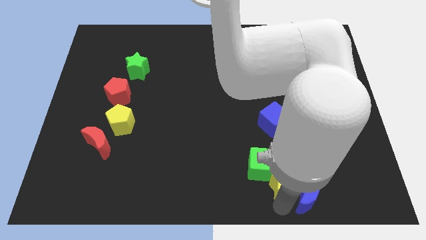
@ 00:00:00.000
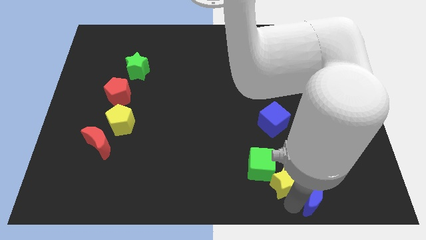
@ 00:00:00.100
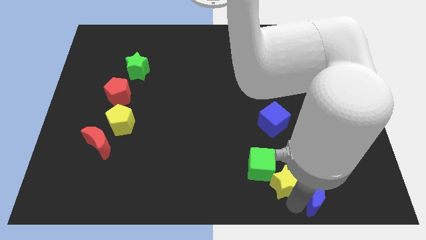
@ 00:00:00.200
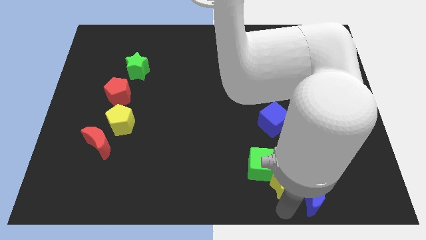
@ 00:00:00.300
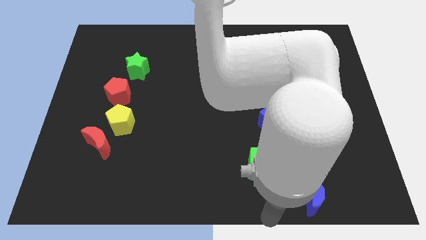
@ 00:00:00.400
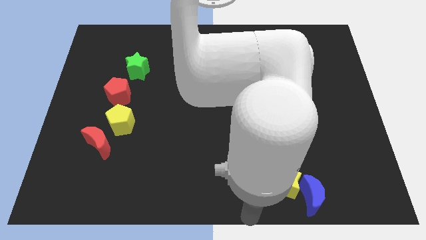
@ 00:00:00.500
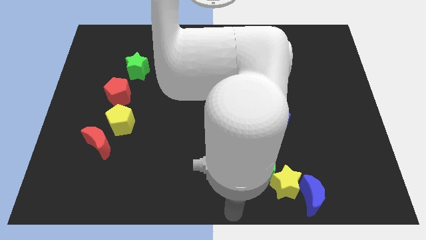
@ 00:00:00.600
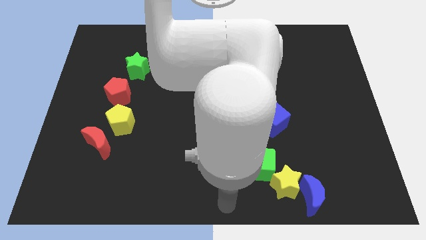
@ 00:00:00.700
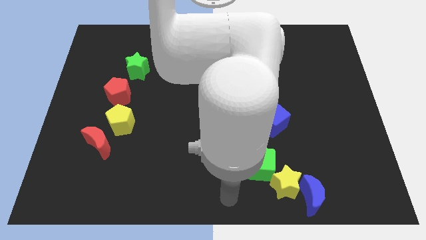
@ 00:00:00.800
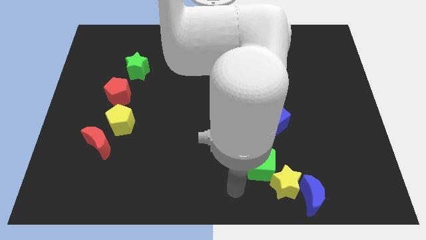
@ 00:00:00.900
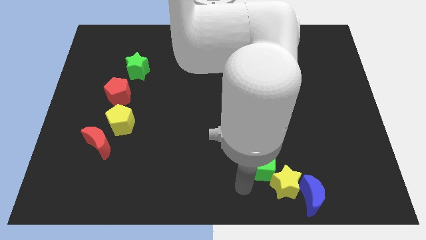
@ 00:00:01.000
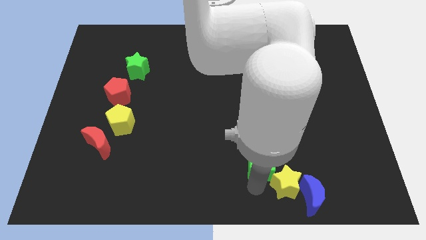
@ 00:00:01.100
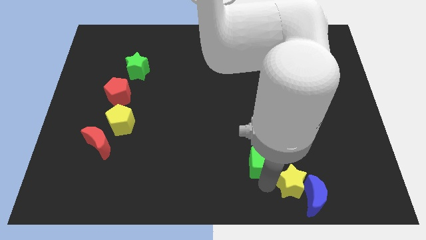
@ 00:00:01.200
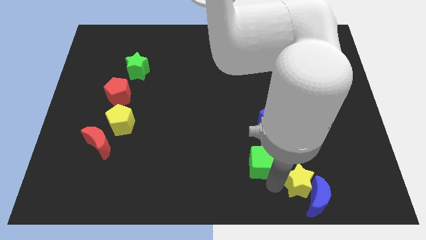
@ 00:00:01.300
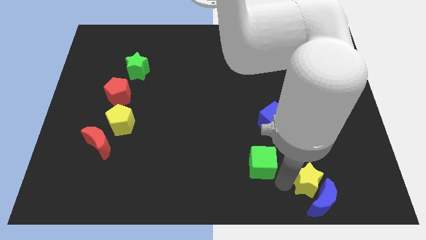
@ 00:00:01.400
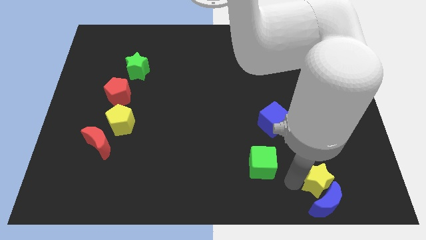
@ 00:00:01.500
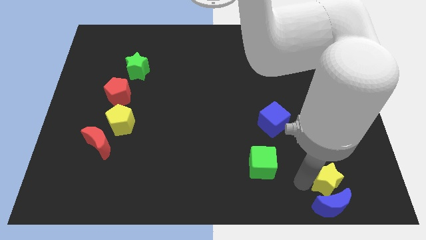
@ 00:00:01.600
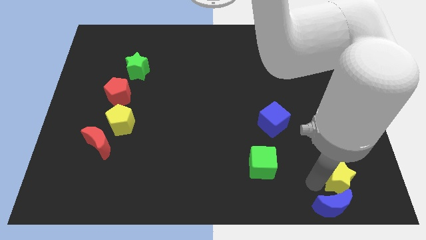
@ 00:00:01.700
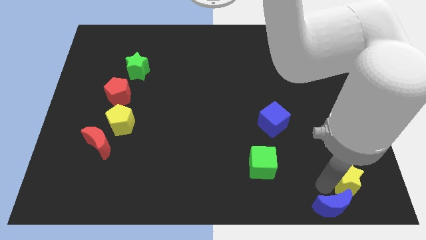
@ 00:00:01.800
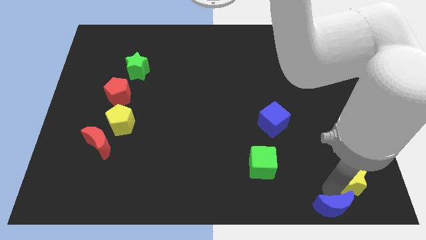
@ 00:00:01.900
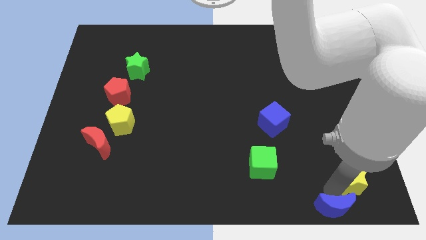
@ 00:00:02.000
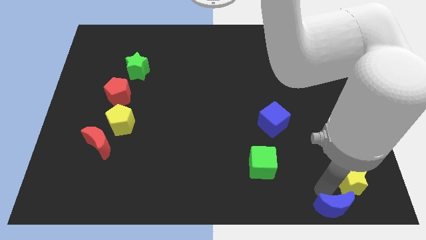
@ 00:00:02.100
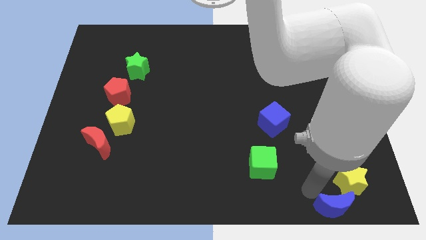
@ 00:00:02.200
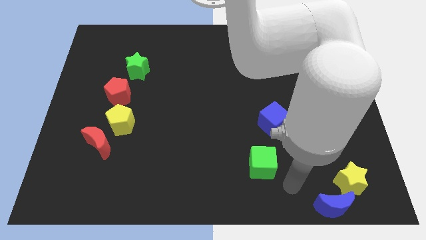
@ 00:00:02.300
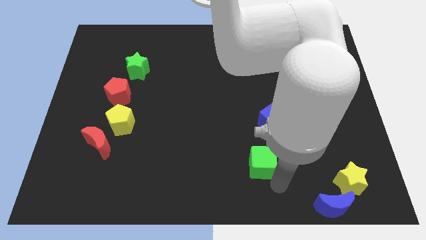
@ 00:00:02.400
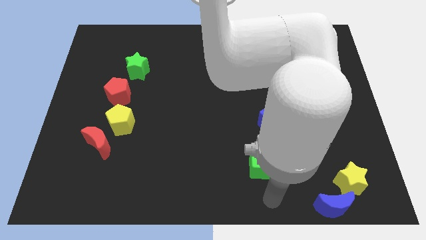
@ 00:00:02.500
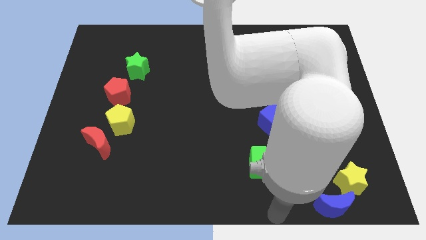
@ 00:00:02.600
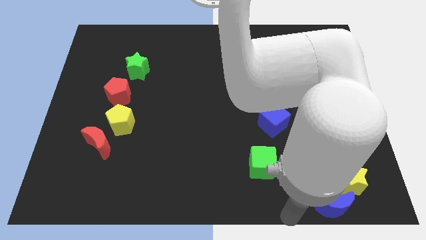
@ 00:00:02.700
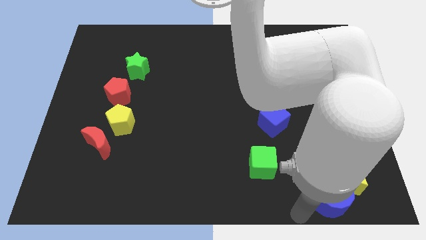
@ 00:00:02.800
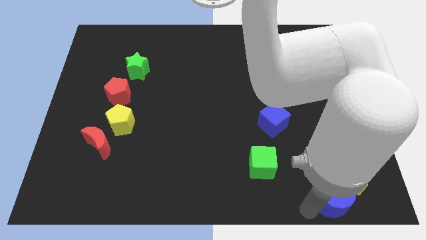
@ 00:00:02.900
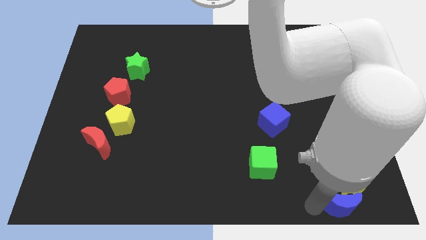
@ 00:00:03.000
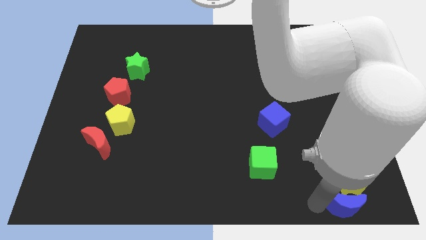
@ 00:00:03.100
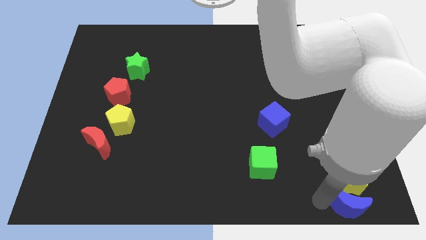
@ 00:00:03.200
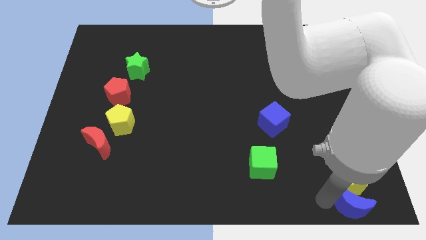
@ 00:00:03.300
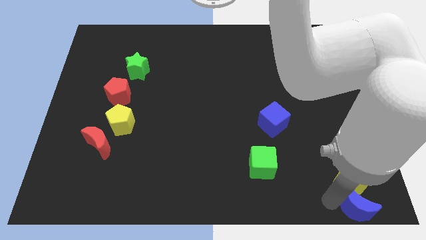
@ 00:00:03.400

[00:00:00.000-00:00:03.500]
move the yellow star and the blue crescent towards the right side

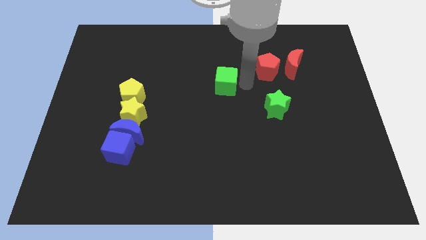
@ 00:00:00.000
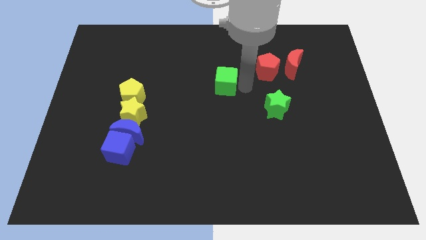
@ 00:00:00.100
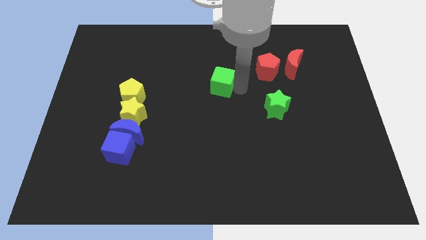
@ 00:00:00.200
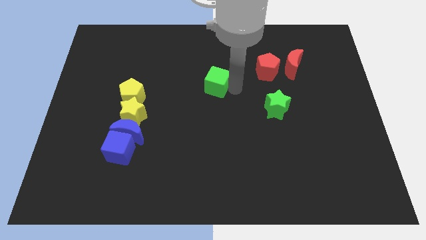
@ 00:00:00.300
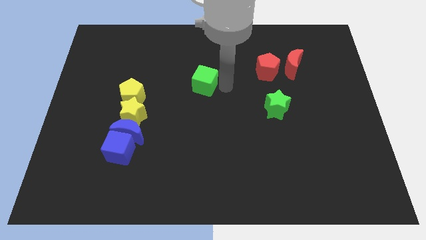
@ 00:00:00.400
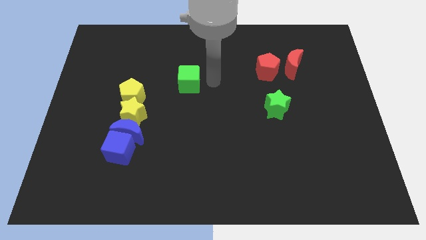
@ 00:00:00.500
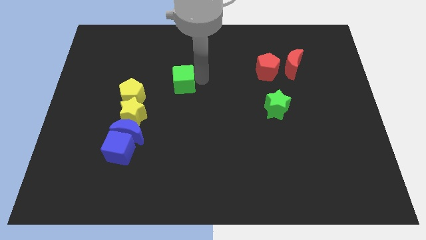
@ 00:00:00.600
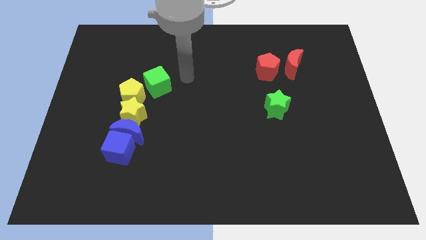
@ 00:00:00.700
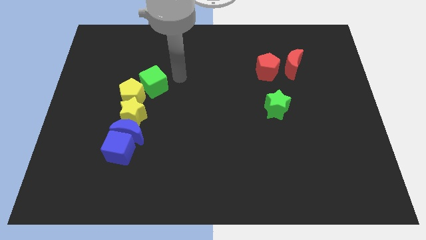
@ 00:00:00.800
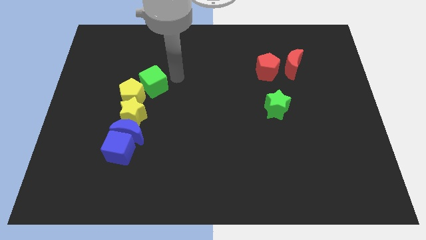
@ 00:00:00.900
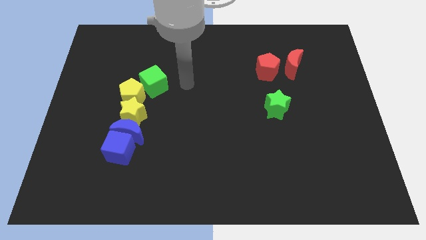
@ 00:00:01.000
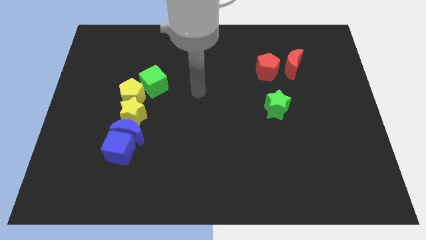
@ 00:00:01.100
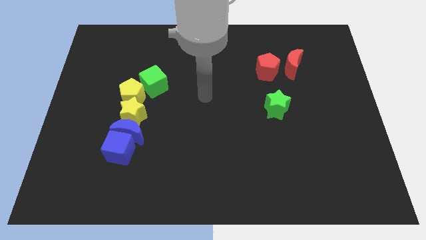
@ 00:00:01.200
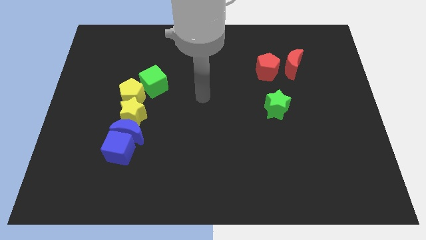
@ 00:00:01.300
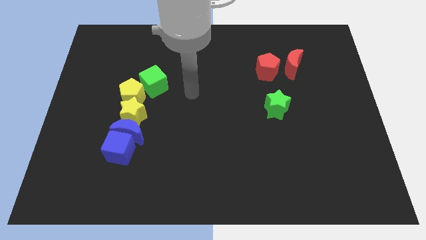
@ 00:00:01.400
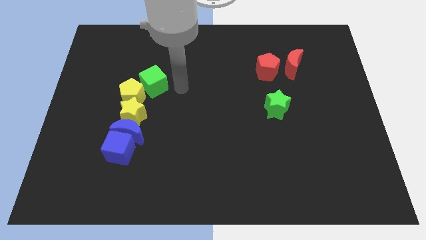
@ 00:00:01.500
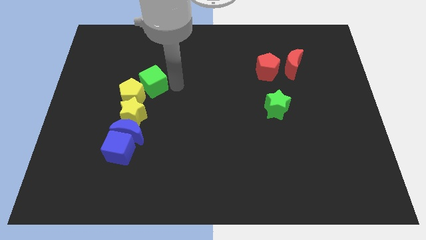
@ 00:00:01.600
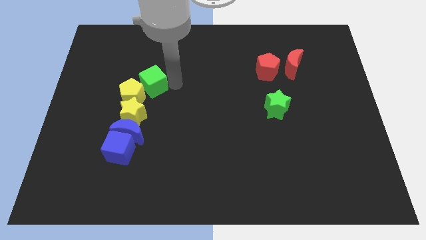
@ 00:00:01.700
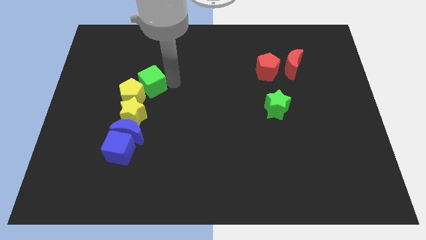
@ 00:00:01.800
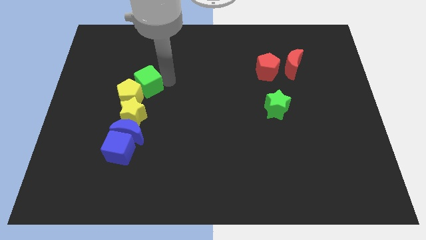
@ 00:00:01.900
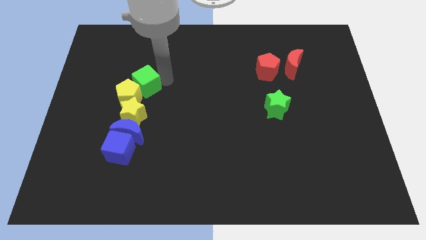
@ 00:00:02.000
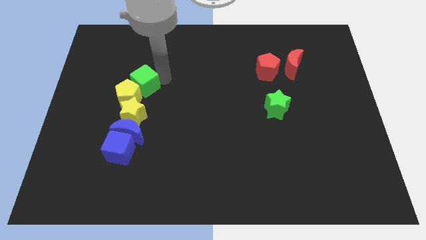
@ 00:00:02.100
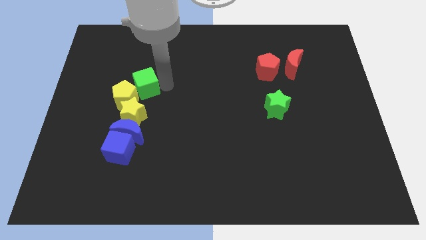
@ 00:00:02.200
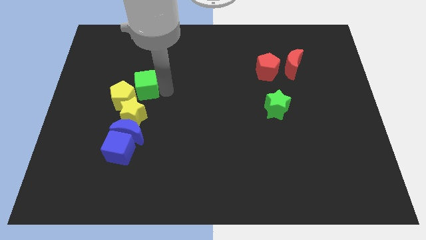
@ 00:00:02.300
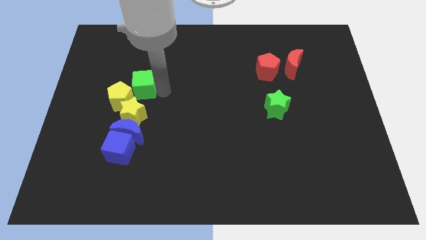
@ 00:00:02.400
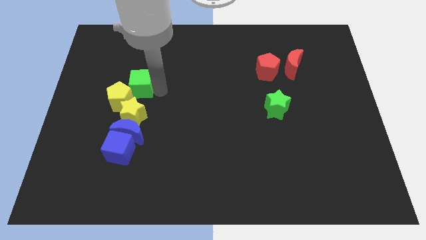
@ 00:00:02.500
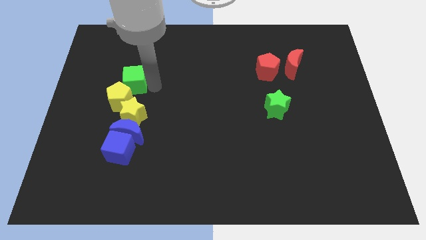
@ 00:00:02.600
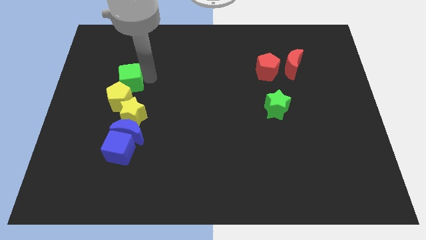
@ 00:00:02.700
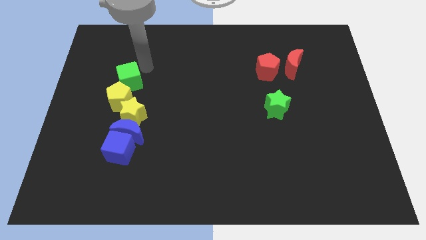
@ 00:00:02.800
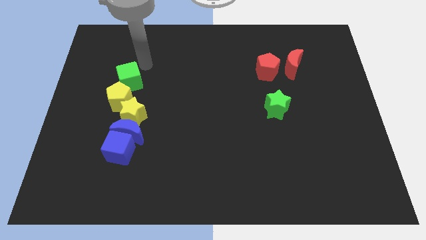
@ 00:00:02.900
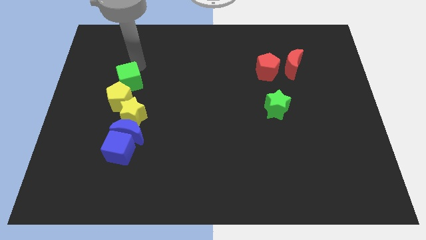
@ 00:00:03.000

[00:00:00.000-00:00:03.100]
place the green cube above the yellow pentagon

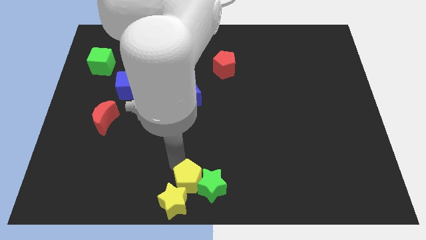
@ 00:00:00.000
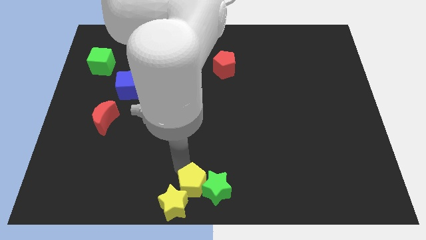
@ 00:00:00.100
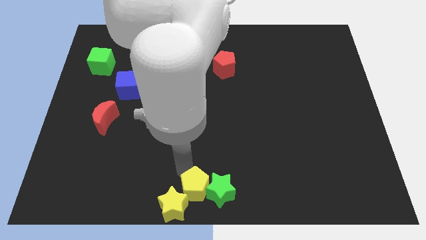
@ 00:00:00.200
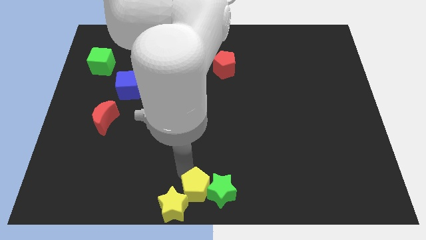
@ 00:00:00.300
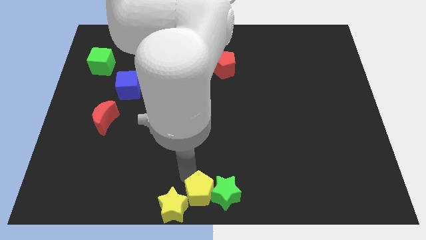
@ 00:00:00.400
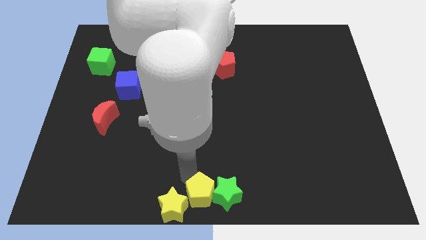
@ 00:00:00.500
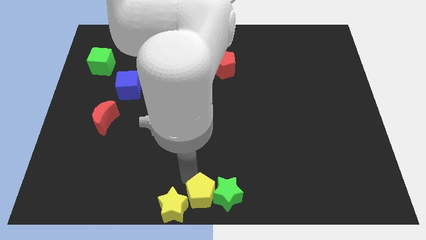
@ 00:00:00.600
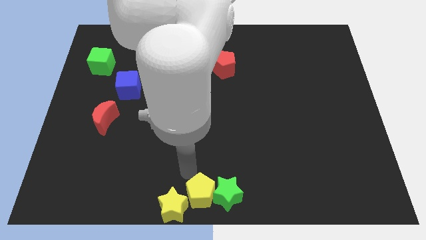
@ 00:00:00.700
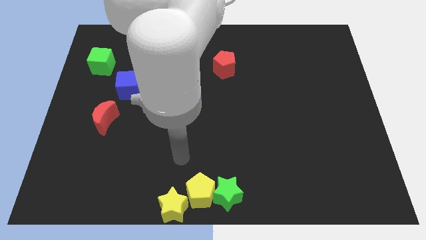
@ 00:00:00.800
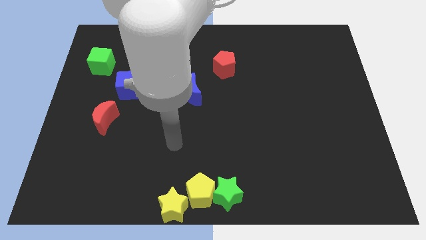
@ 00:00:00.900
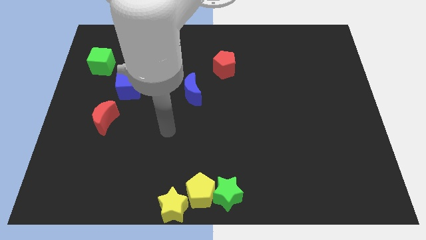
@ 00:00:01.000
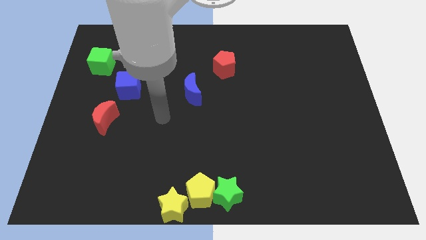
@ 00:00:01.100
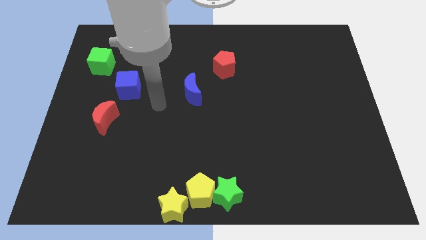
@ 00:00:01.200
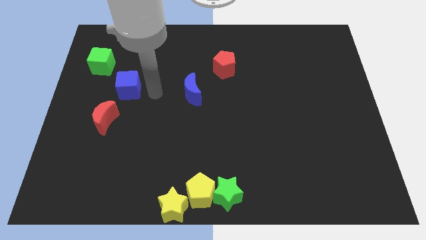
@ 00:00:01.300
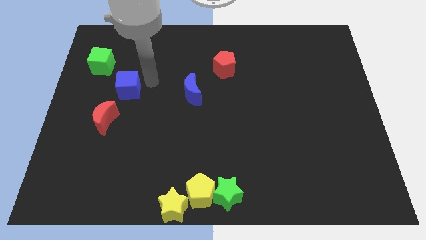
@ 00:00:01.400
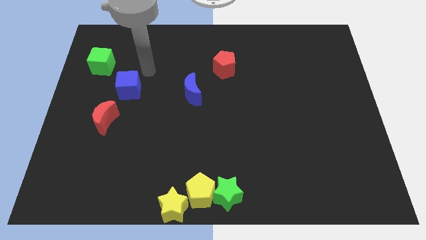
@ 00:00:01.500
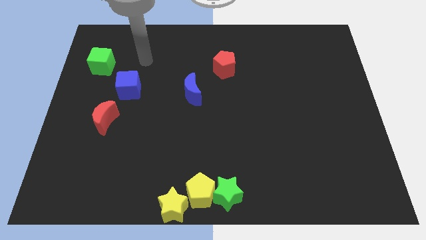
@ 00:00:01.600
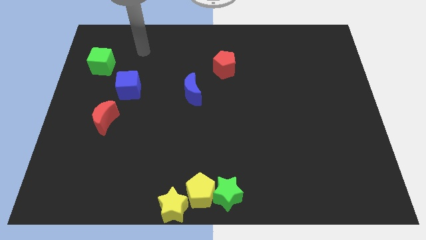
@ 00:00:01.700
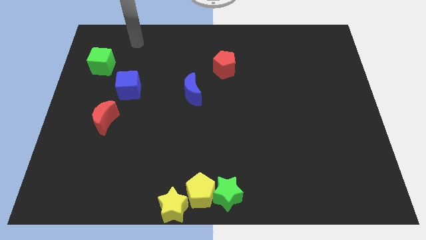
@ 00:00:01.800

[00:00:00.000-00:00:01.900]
push yellow pentagon between yellow star and green star

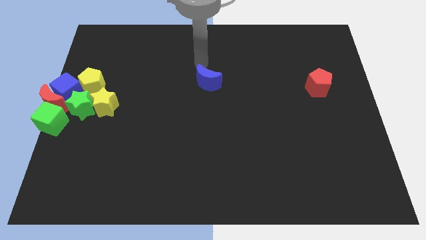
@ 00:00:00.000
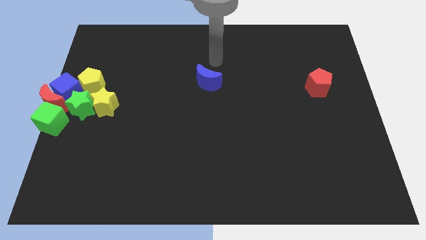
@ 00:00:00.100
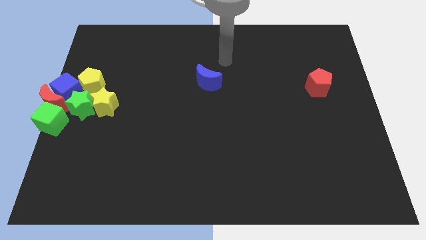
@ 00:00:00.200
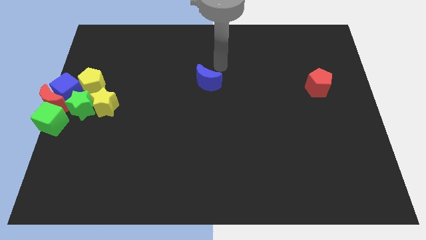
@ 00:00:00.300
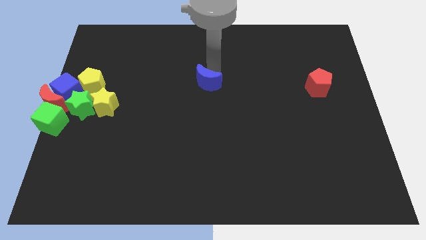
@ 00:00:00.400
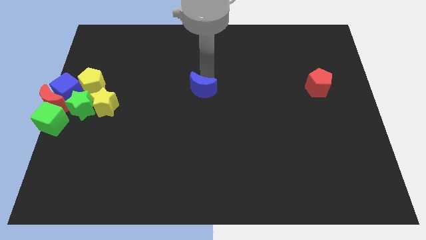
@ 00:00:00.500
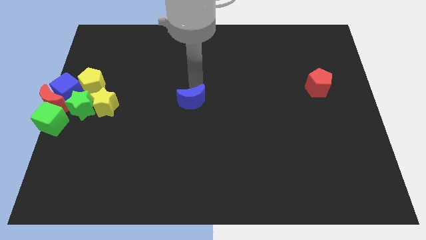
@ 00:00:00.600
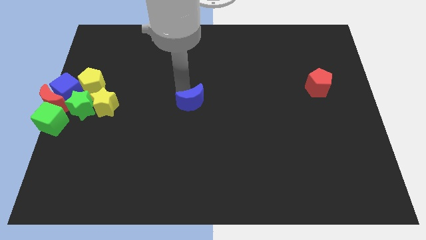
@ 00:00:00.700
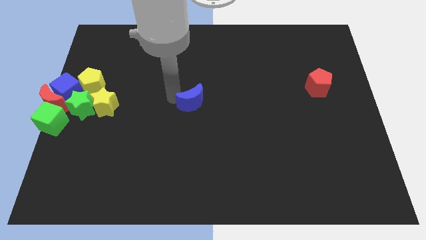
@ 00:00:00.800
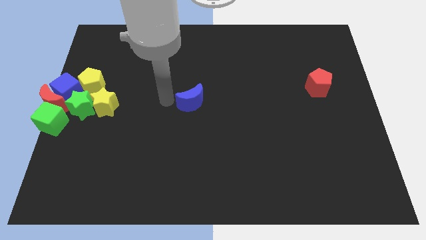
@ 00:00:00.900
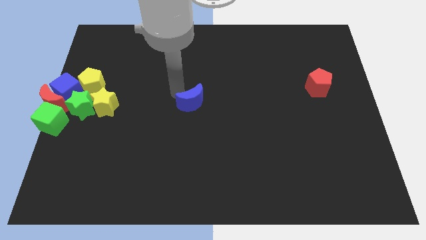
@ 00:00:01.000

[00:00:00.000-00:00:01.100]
place the blue moon to the middle of the board
